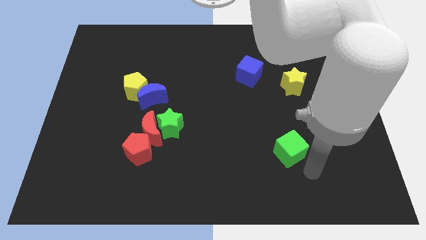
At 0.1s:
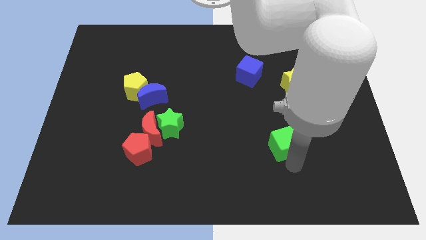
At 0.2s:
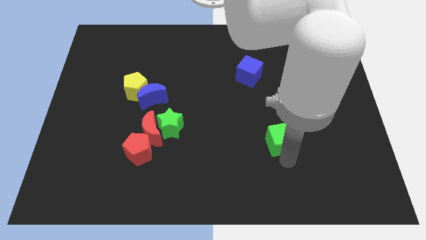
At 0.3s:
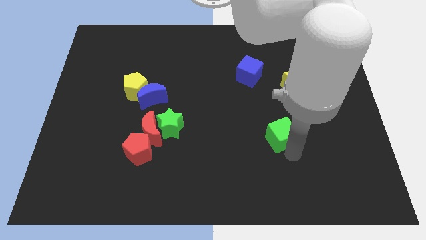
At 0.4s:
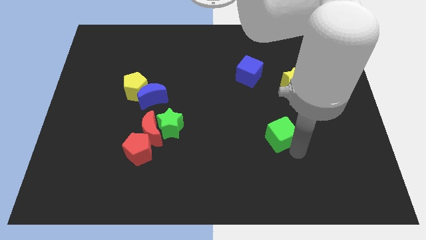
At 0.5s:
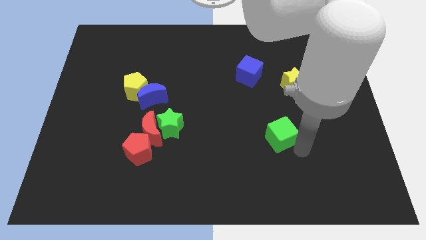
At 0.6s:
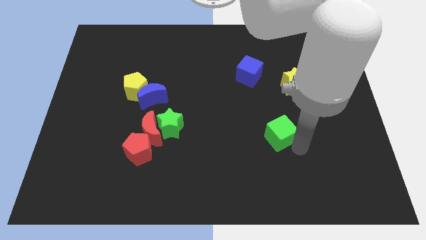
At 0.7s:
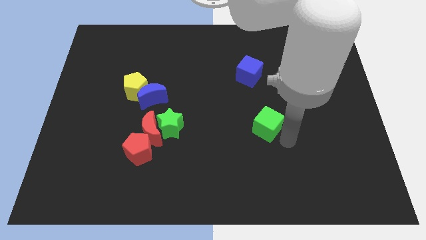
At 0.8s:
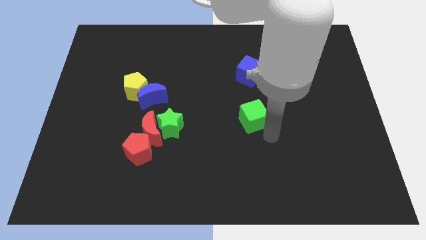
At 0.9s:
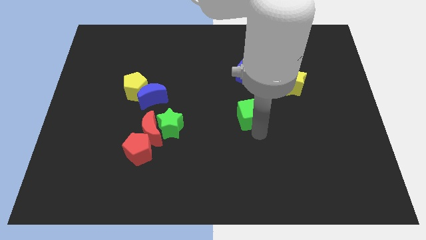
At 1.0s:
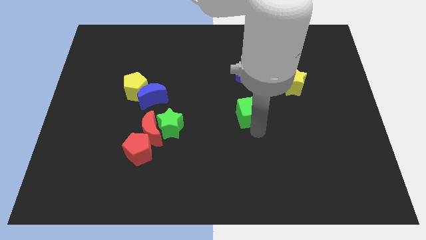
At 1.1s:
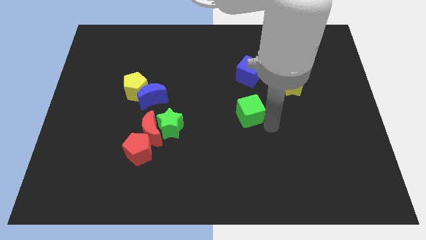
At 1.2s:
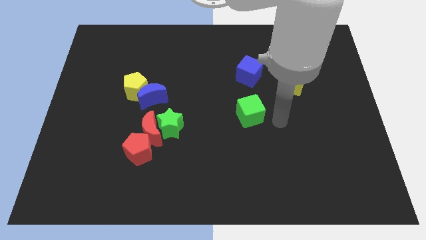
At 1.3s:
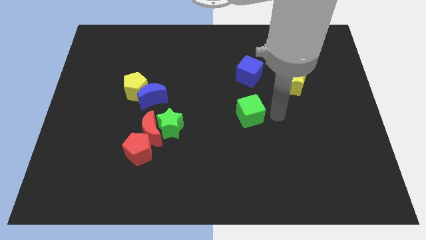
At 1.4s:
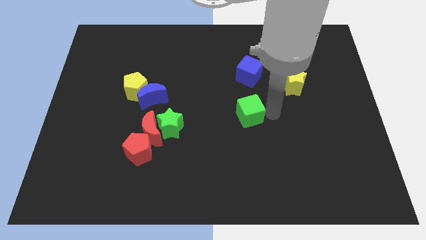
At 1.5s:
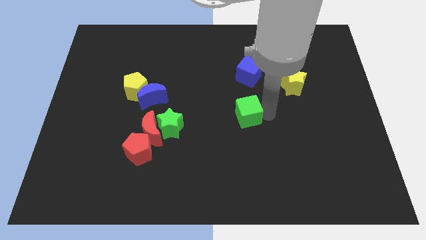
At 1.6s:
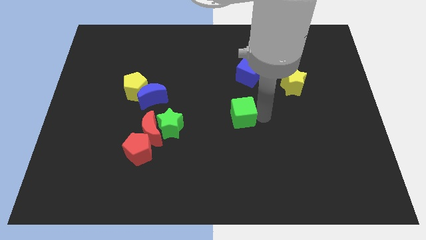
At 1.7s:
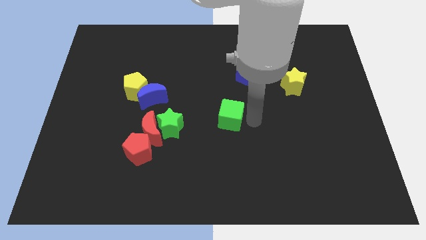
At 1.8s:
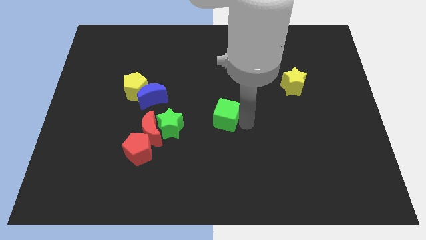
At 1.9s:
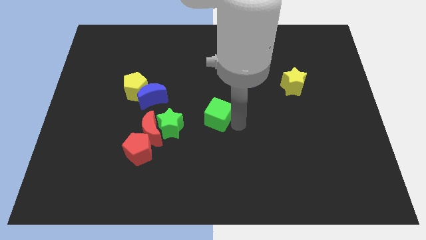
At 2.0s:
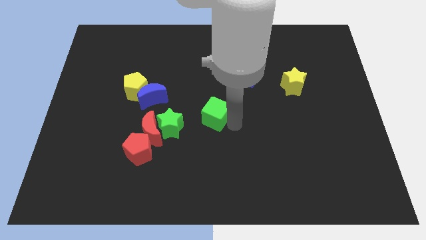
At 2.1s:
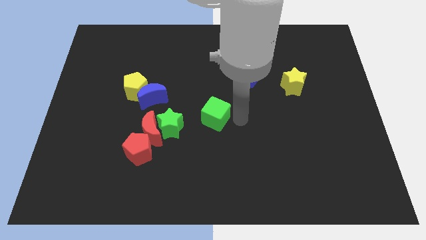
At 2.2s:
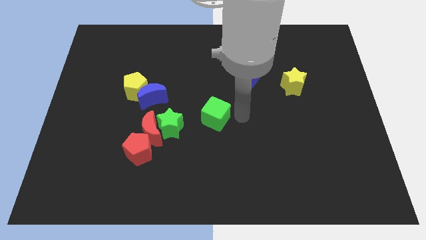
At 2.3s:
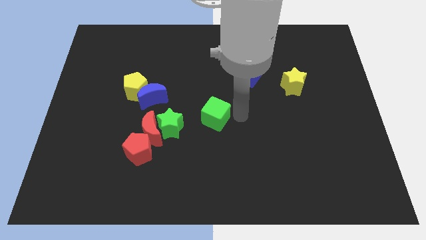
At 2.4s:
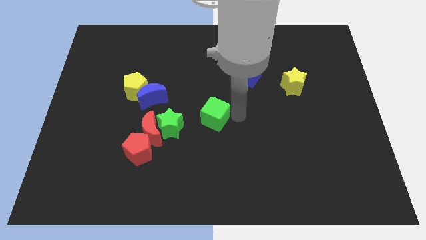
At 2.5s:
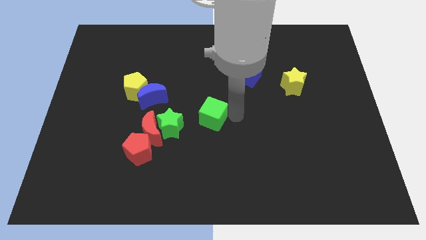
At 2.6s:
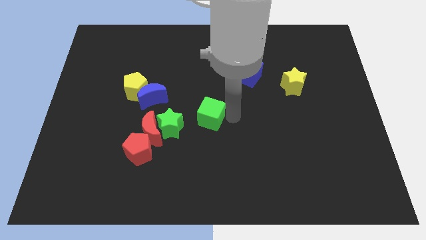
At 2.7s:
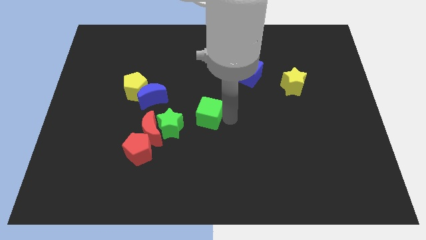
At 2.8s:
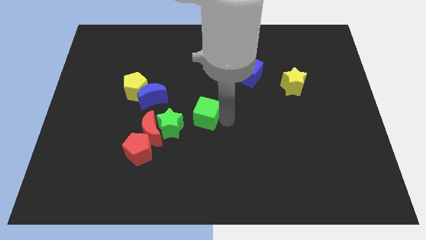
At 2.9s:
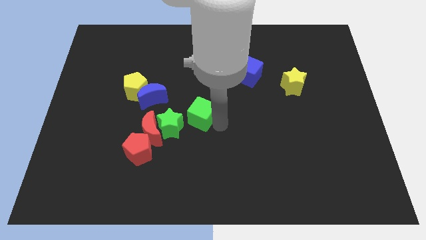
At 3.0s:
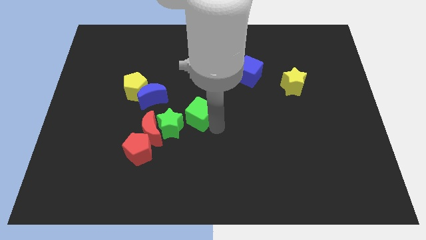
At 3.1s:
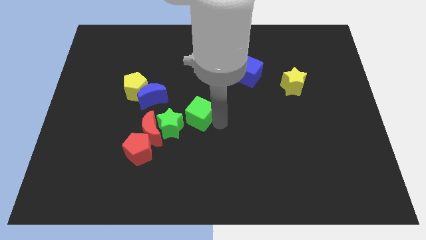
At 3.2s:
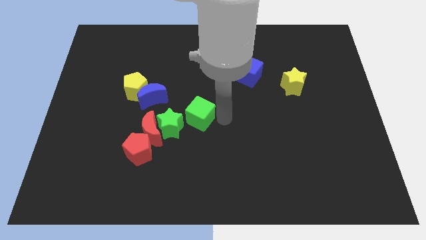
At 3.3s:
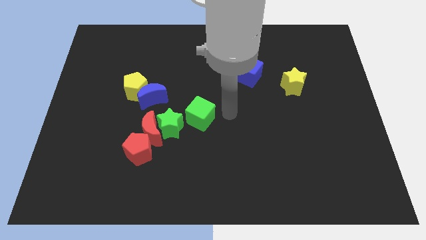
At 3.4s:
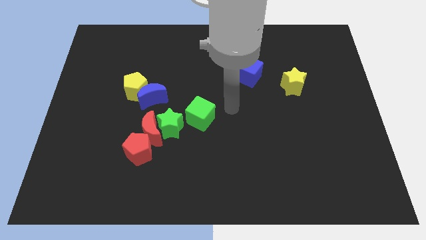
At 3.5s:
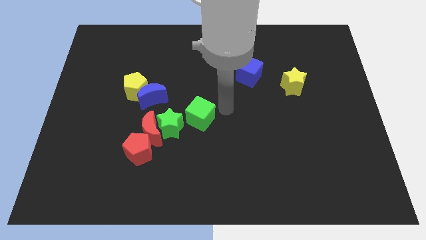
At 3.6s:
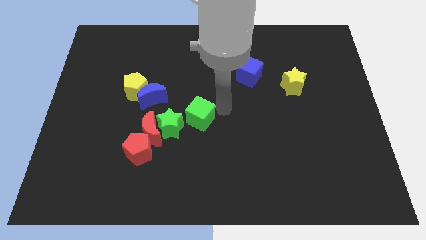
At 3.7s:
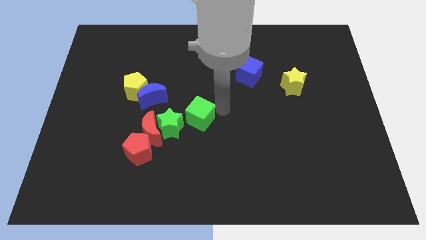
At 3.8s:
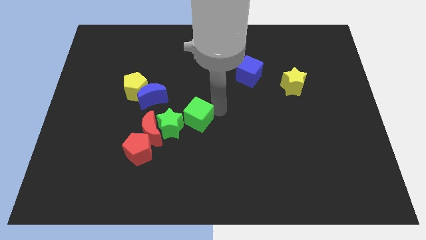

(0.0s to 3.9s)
drag the green cube to the left

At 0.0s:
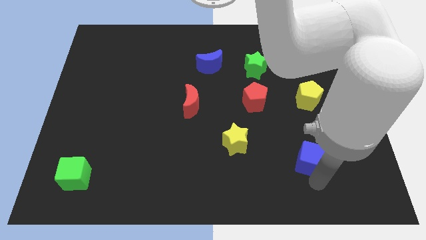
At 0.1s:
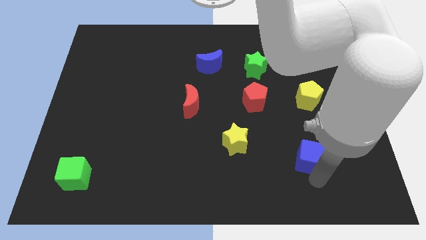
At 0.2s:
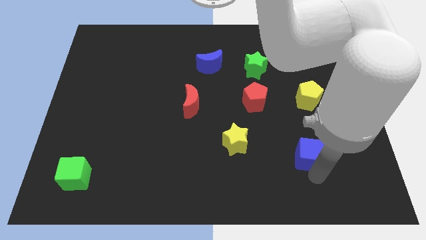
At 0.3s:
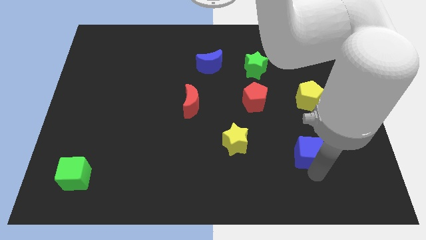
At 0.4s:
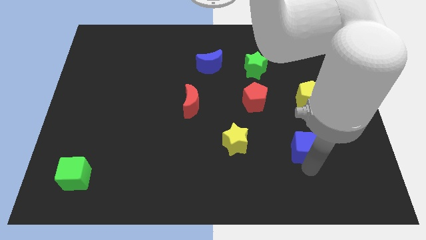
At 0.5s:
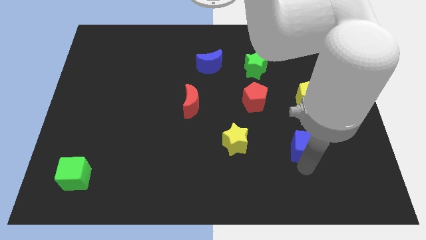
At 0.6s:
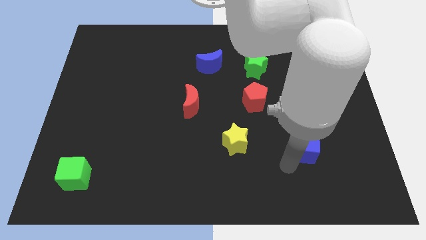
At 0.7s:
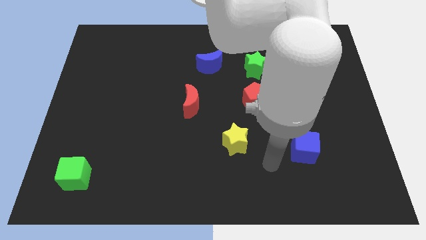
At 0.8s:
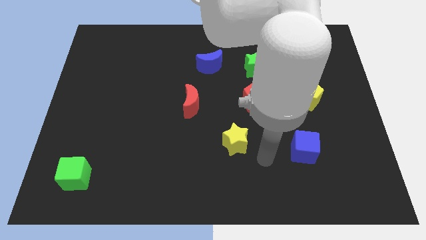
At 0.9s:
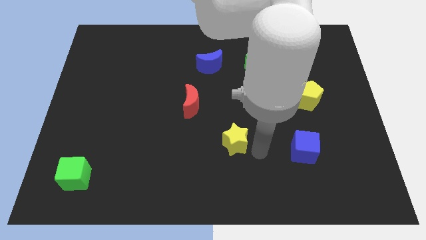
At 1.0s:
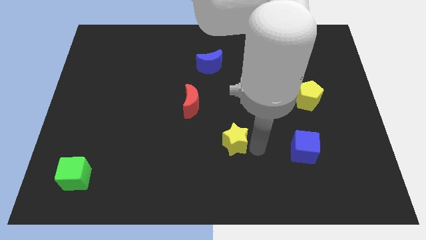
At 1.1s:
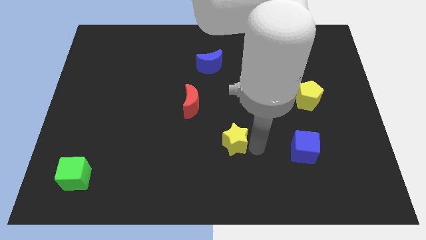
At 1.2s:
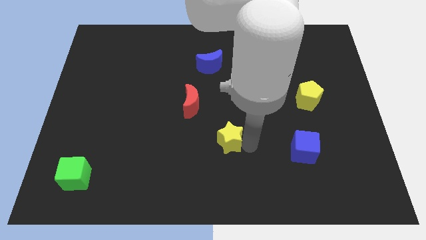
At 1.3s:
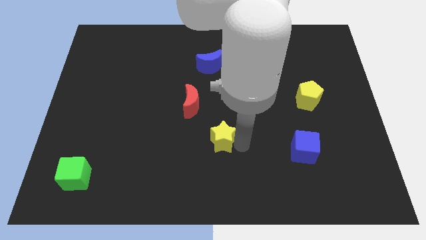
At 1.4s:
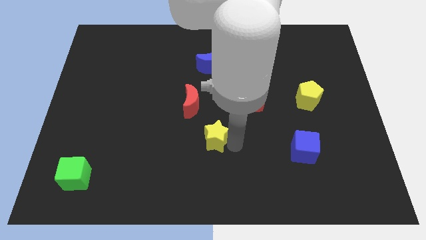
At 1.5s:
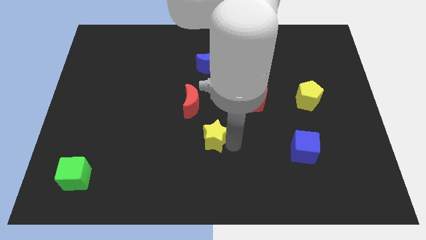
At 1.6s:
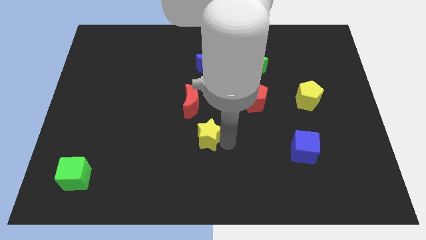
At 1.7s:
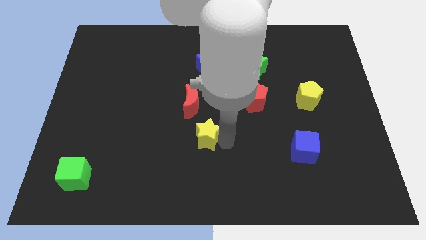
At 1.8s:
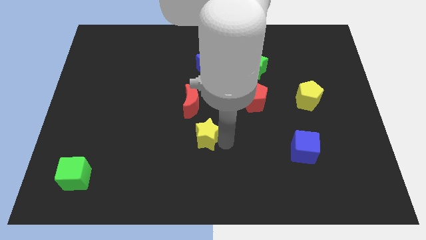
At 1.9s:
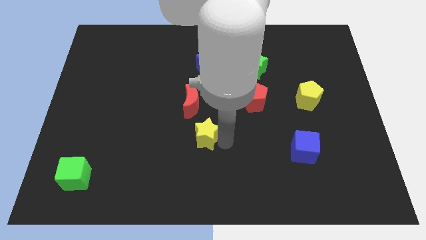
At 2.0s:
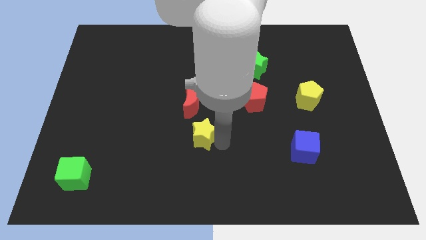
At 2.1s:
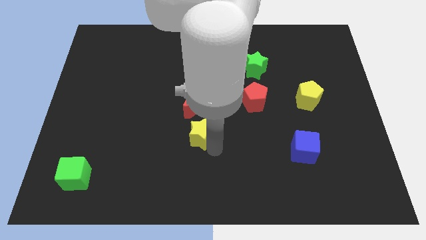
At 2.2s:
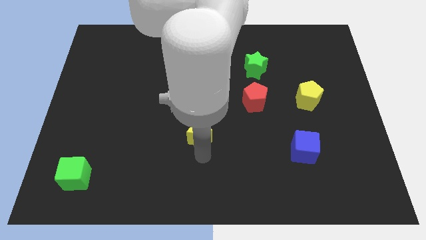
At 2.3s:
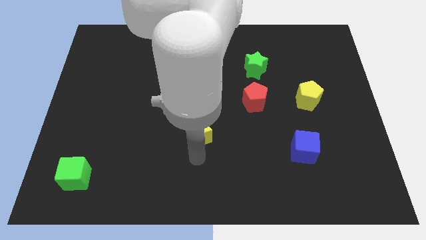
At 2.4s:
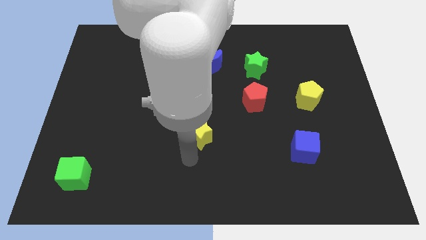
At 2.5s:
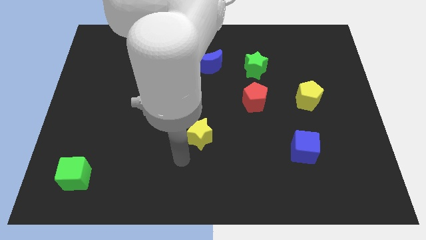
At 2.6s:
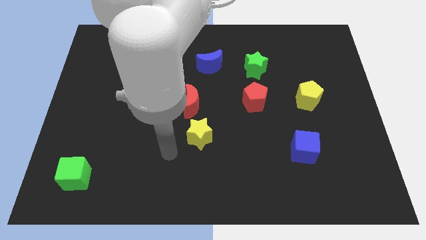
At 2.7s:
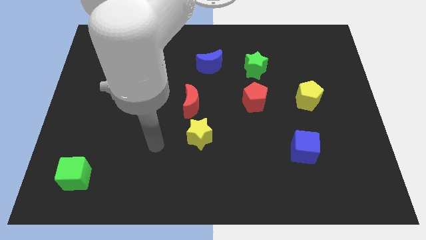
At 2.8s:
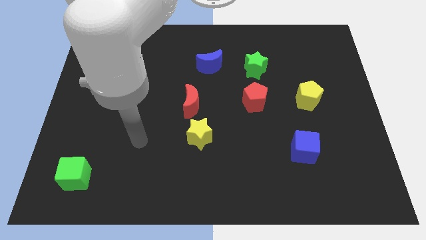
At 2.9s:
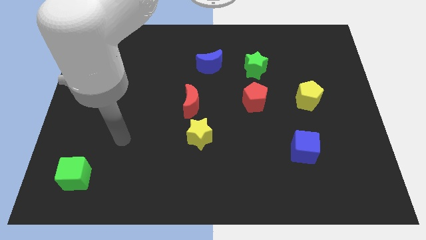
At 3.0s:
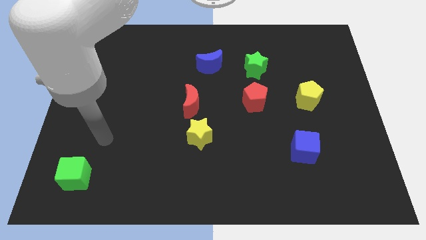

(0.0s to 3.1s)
push the yellow star towards the bottom of the red crescent

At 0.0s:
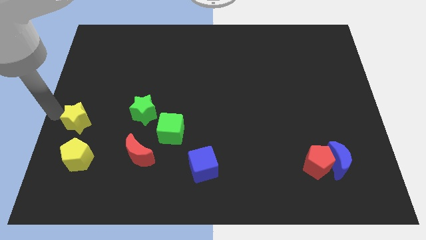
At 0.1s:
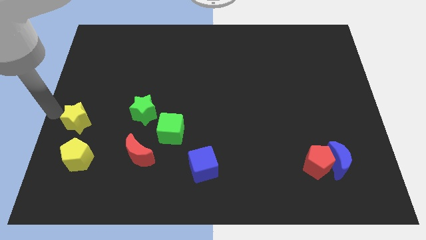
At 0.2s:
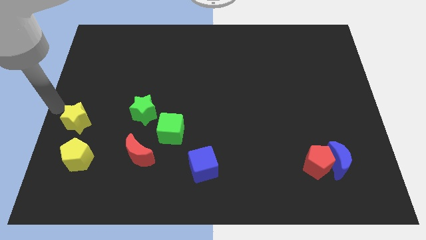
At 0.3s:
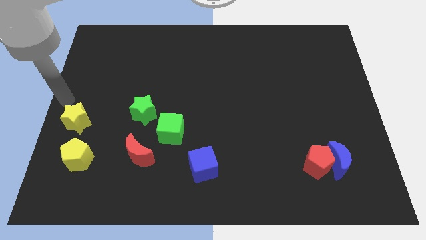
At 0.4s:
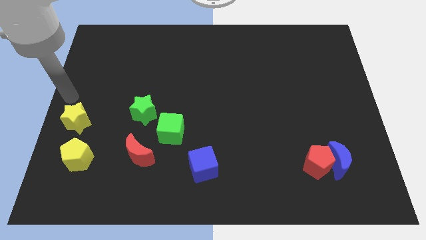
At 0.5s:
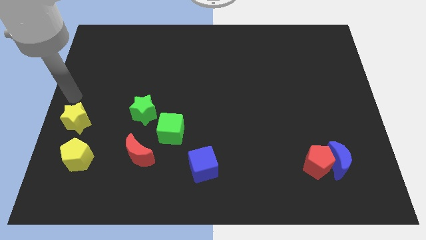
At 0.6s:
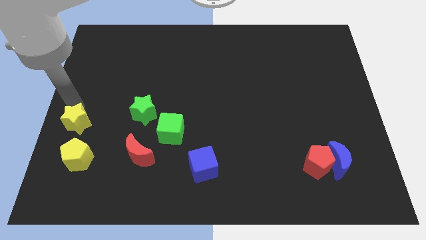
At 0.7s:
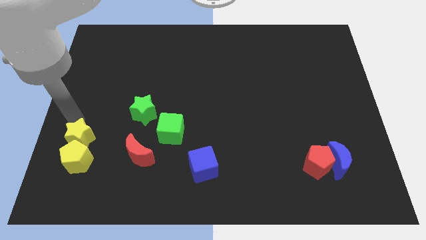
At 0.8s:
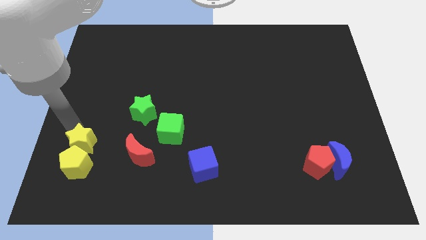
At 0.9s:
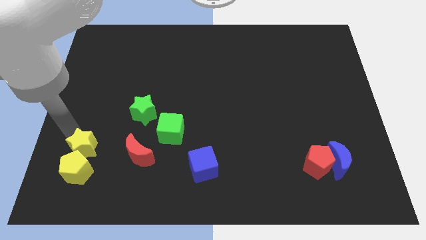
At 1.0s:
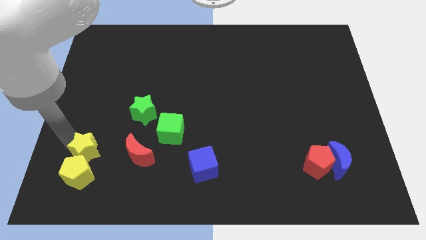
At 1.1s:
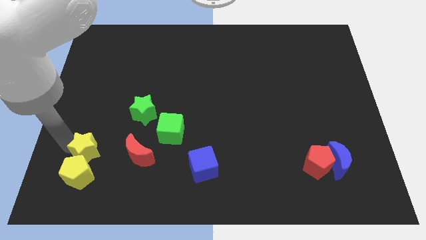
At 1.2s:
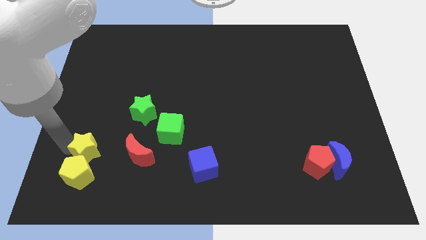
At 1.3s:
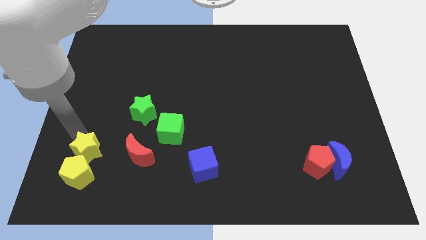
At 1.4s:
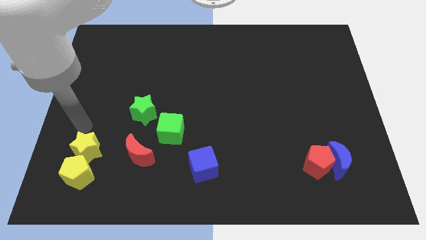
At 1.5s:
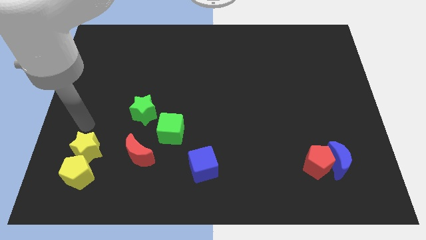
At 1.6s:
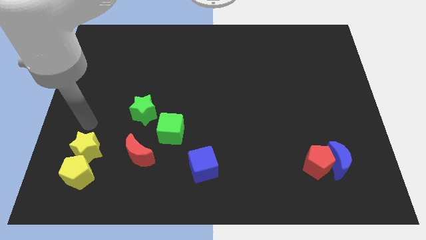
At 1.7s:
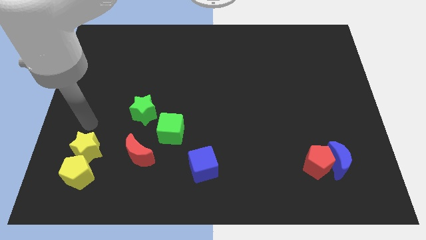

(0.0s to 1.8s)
push yellow star downwards to yellow pentagon

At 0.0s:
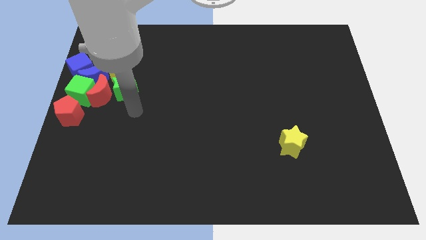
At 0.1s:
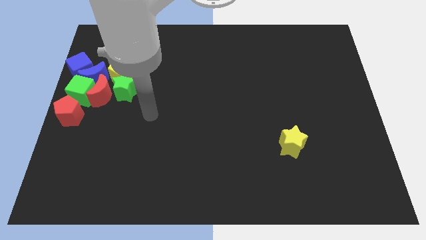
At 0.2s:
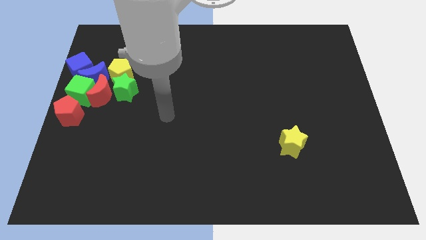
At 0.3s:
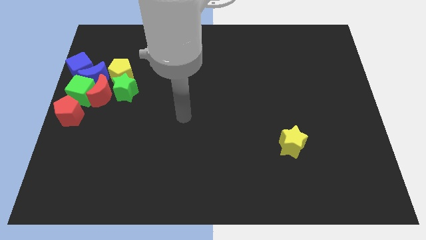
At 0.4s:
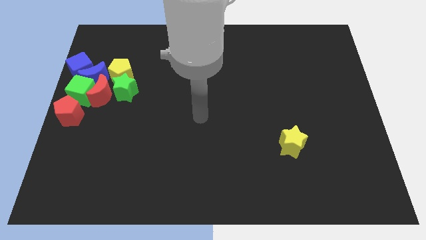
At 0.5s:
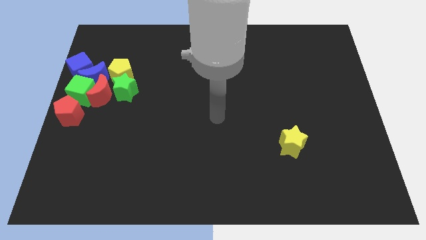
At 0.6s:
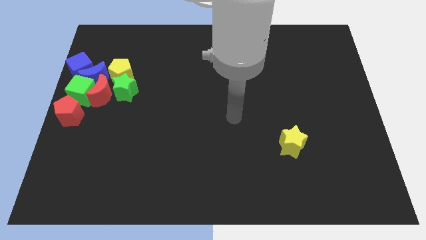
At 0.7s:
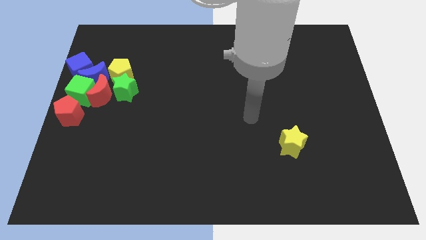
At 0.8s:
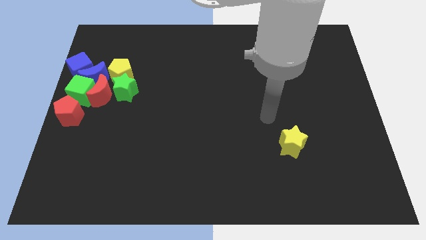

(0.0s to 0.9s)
move the arm away from the green star
